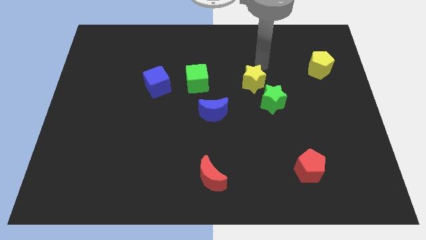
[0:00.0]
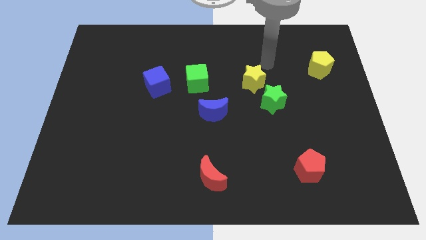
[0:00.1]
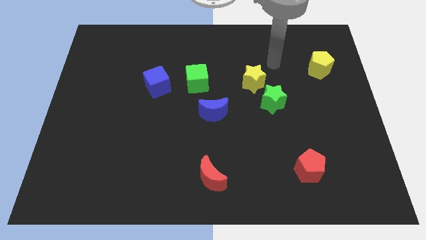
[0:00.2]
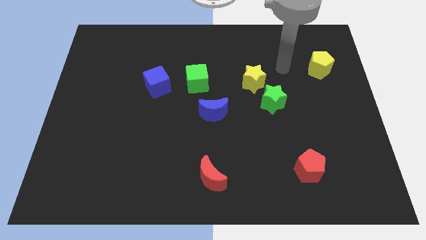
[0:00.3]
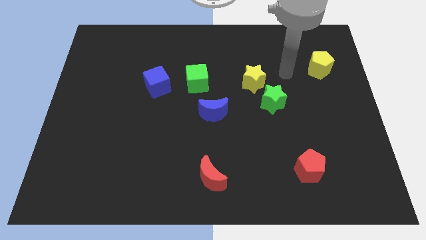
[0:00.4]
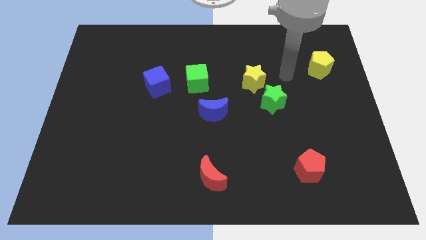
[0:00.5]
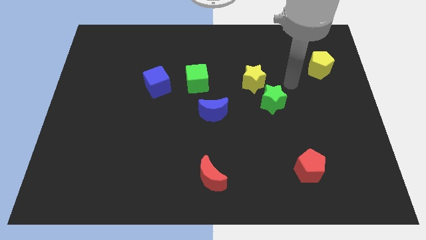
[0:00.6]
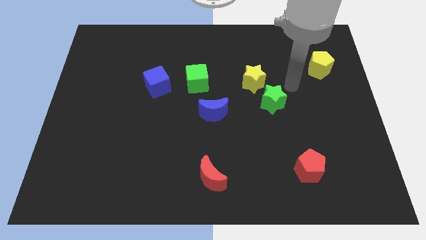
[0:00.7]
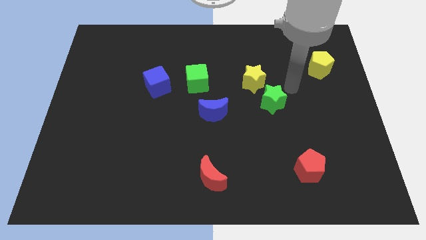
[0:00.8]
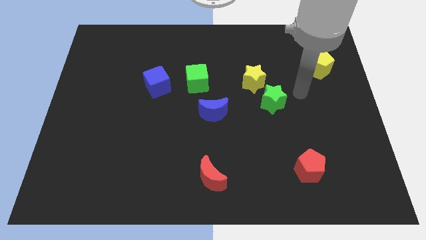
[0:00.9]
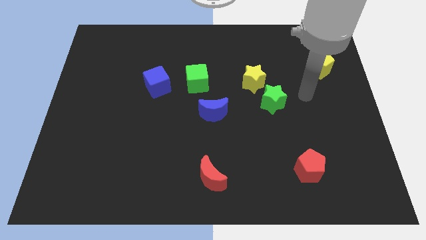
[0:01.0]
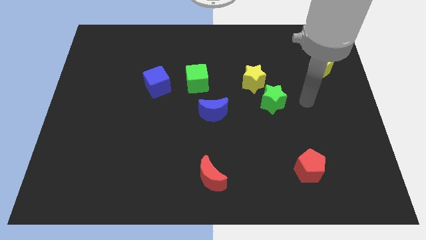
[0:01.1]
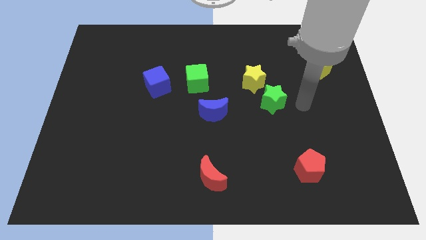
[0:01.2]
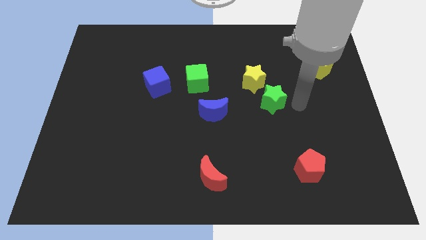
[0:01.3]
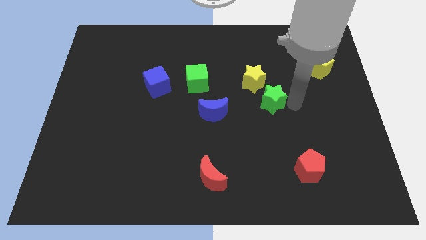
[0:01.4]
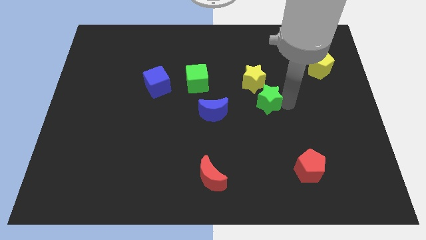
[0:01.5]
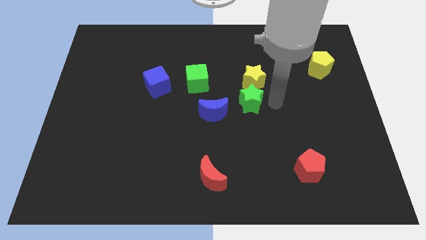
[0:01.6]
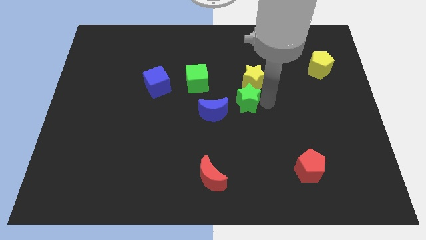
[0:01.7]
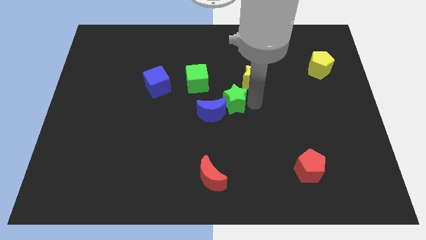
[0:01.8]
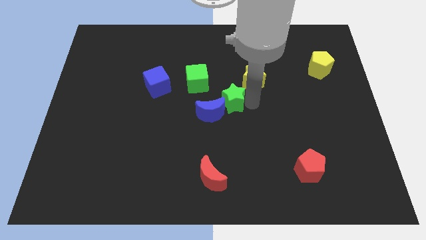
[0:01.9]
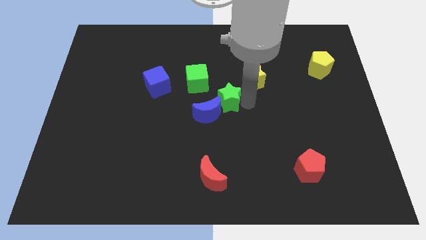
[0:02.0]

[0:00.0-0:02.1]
push the green star into the blue crescent

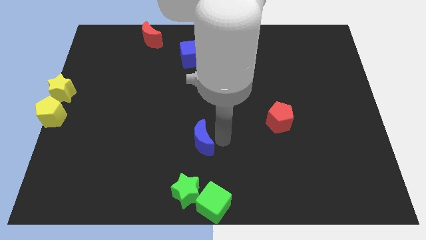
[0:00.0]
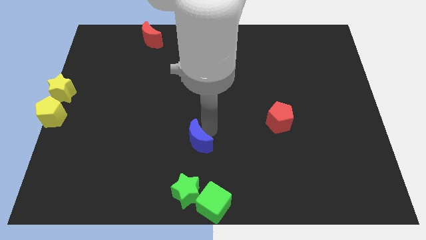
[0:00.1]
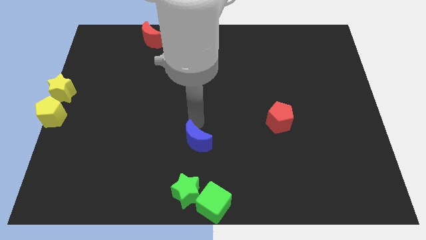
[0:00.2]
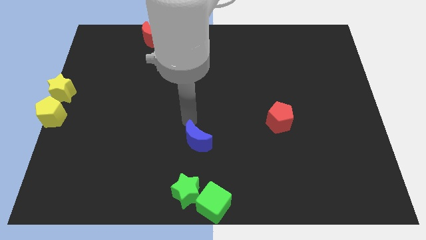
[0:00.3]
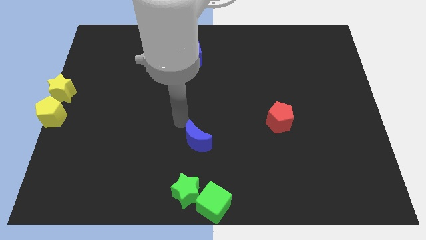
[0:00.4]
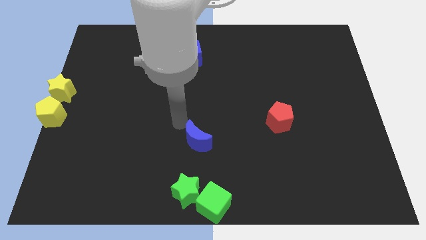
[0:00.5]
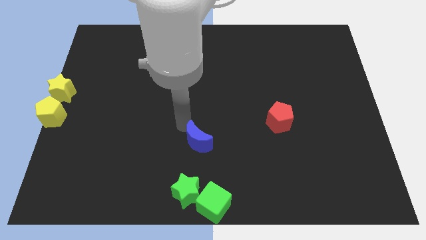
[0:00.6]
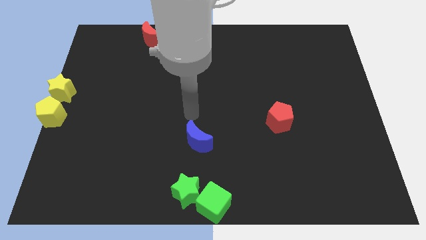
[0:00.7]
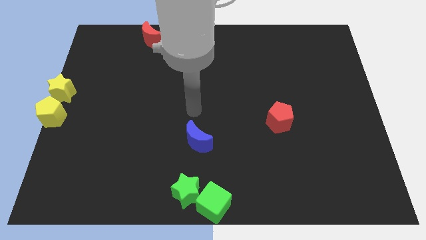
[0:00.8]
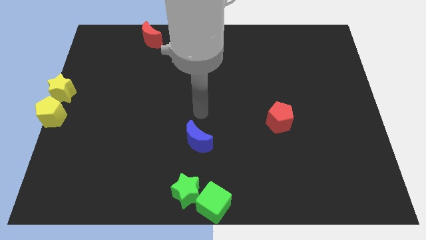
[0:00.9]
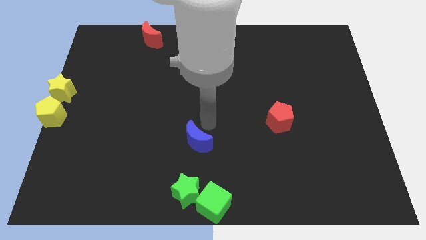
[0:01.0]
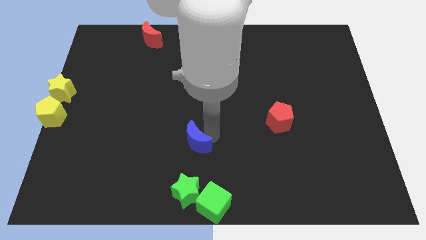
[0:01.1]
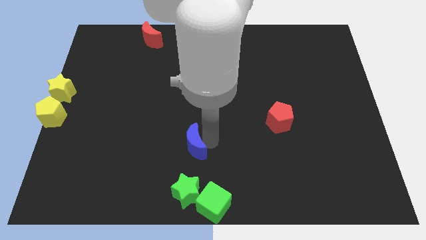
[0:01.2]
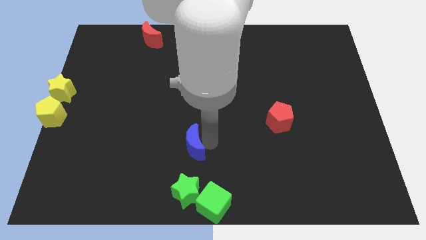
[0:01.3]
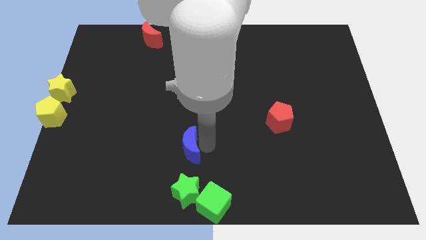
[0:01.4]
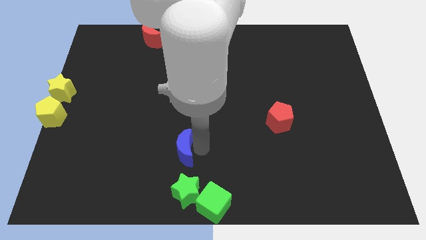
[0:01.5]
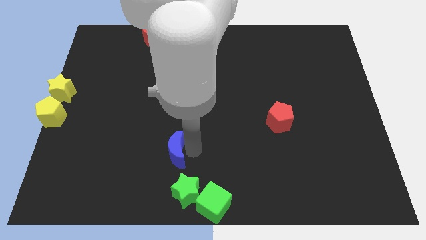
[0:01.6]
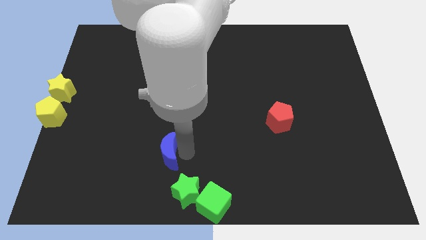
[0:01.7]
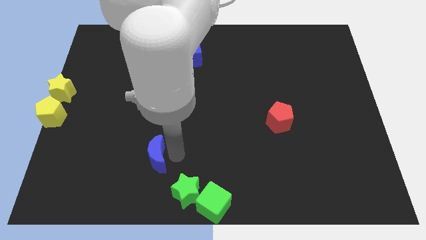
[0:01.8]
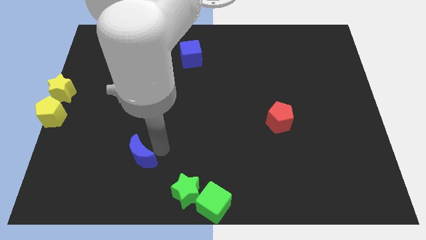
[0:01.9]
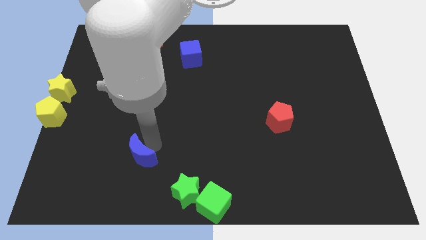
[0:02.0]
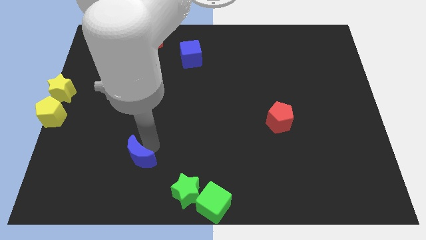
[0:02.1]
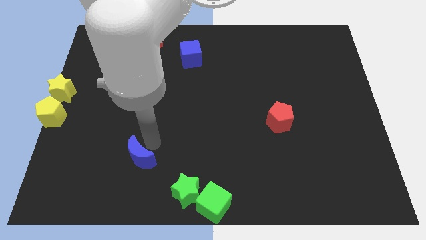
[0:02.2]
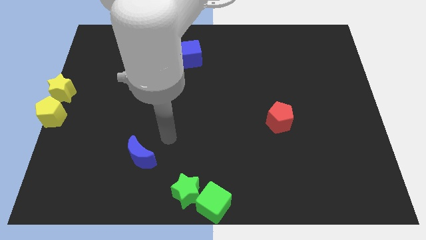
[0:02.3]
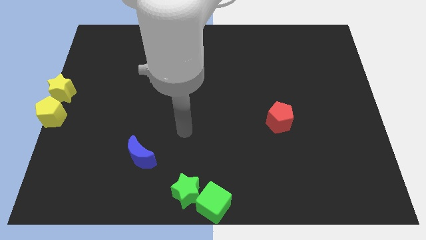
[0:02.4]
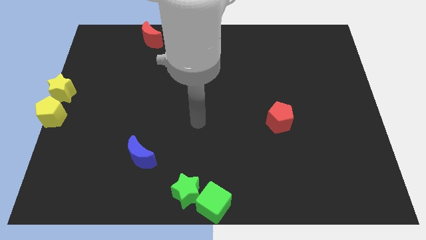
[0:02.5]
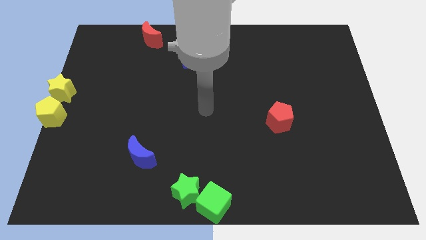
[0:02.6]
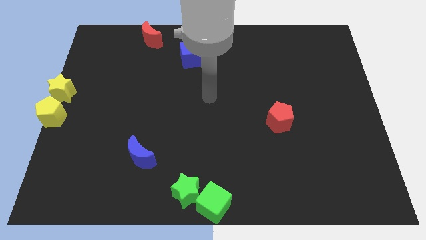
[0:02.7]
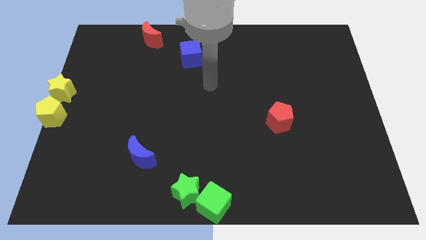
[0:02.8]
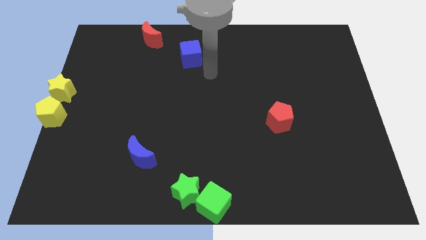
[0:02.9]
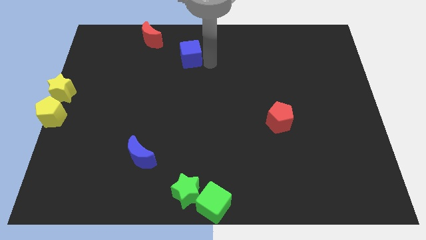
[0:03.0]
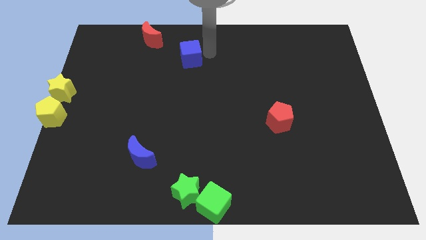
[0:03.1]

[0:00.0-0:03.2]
move the blue moon diagonally top left of the green blocks

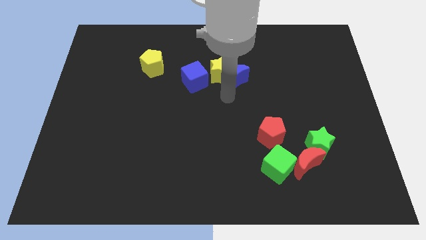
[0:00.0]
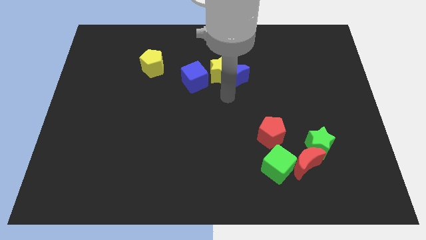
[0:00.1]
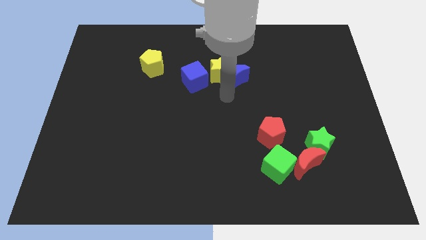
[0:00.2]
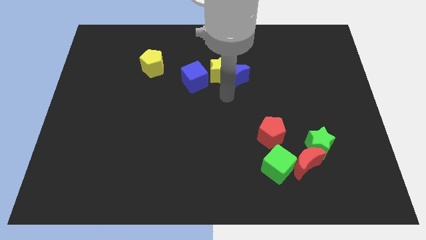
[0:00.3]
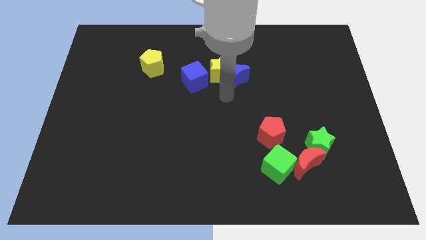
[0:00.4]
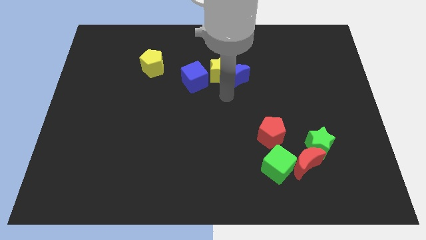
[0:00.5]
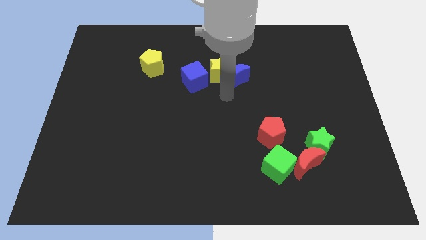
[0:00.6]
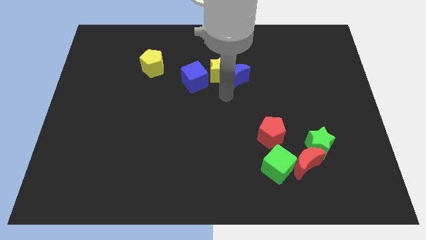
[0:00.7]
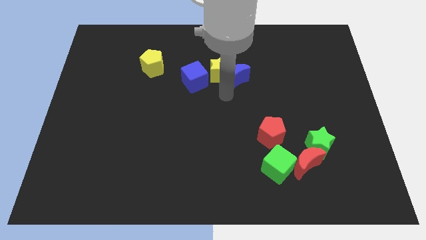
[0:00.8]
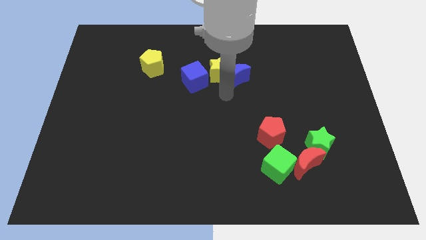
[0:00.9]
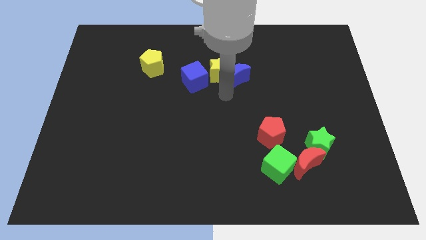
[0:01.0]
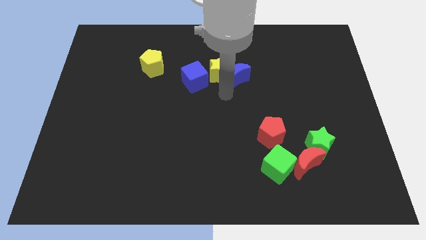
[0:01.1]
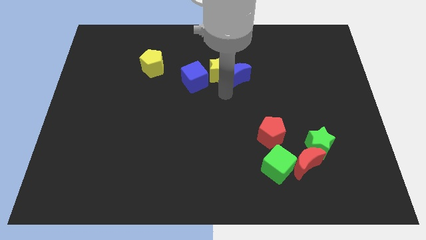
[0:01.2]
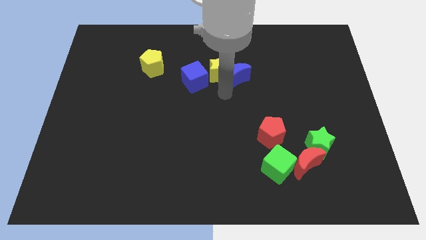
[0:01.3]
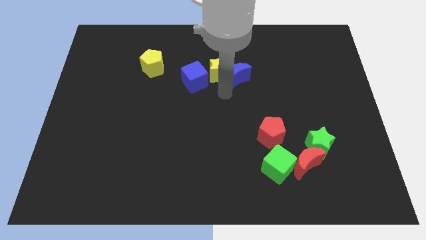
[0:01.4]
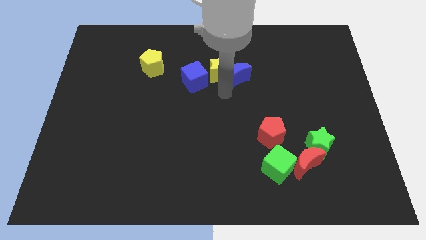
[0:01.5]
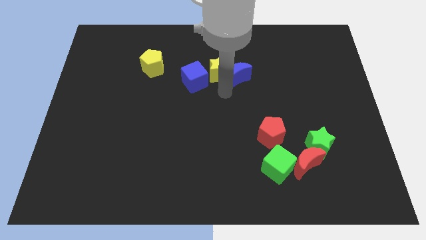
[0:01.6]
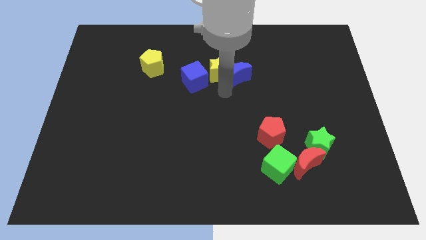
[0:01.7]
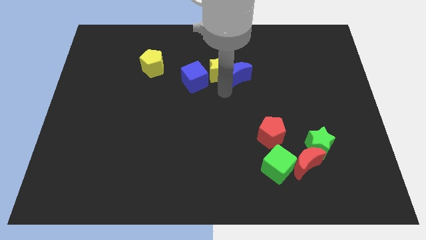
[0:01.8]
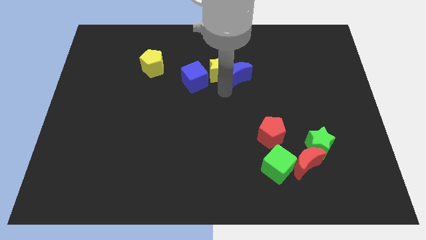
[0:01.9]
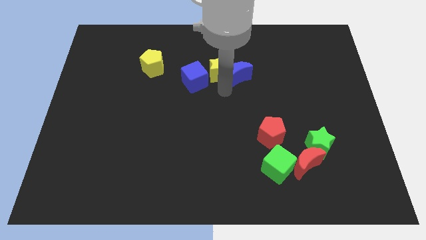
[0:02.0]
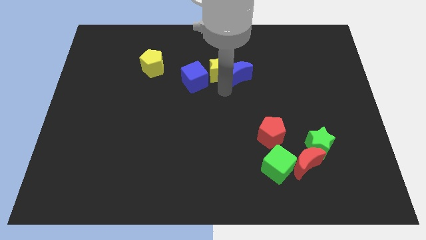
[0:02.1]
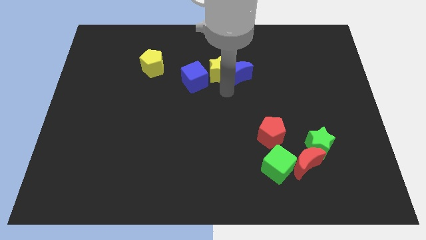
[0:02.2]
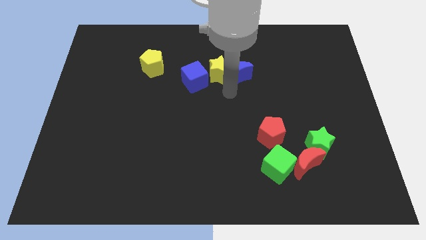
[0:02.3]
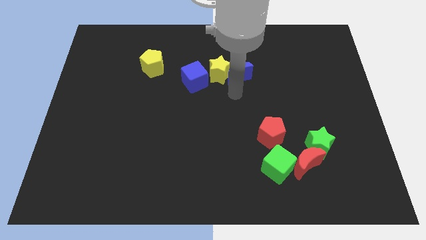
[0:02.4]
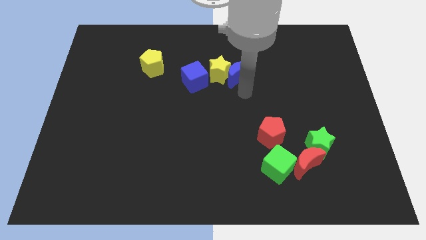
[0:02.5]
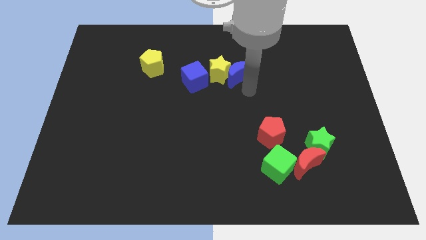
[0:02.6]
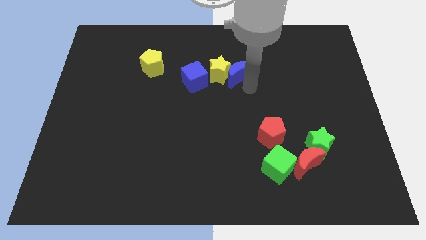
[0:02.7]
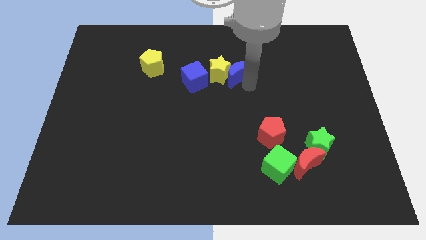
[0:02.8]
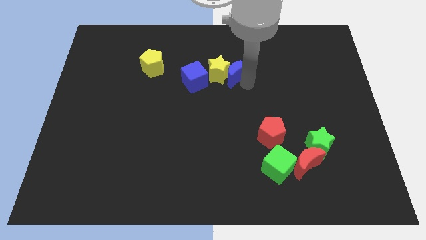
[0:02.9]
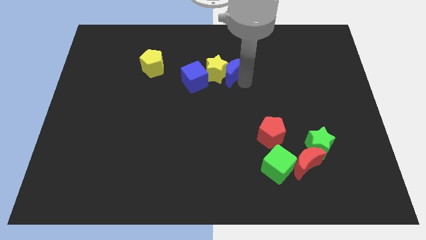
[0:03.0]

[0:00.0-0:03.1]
move the arm slightly touching the blue moon

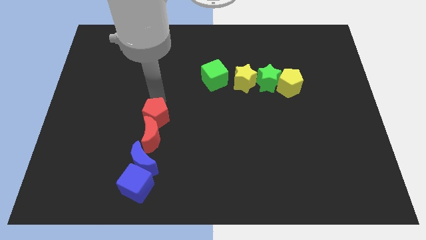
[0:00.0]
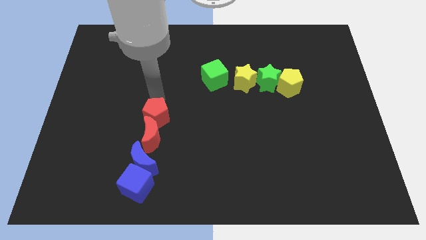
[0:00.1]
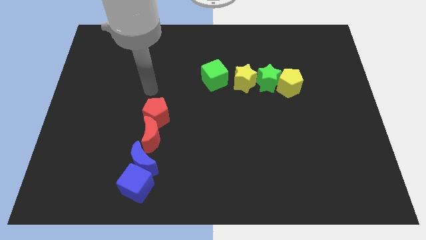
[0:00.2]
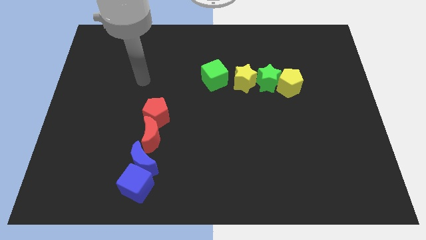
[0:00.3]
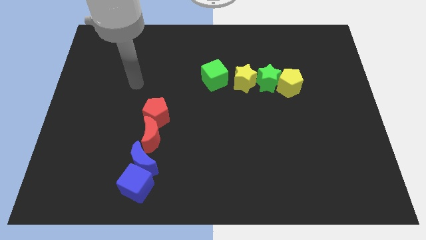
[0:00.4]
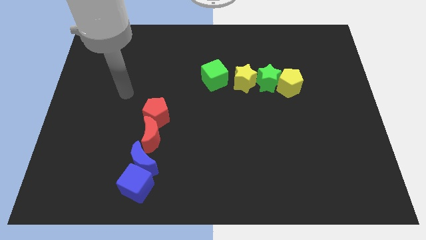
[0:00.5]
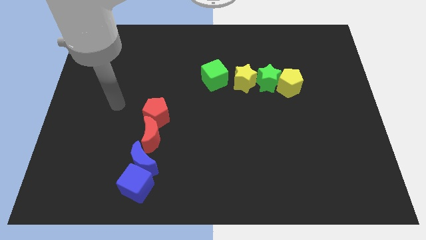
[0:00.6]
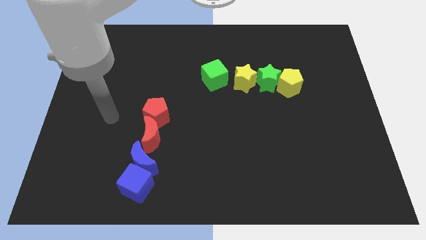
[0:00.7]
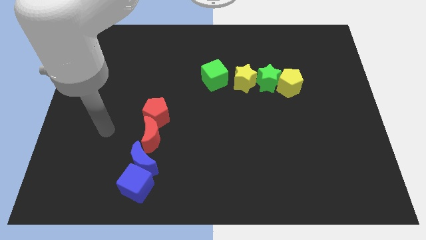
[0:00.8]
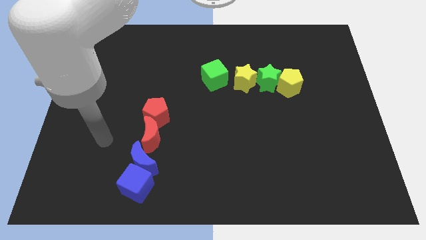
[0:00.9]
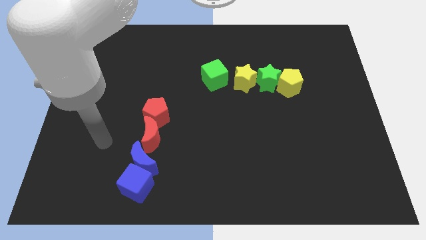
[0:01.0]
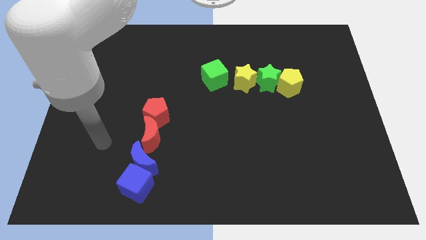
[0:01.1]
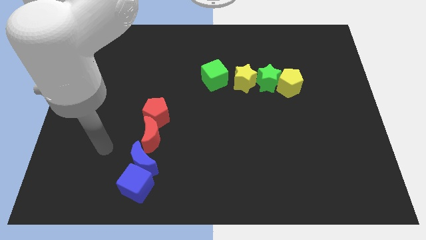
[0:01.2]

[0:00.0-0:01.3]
place your hand at the left of the vertical line of blocks
